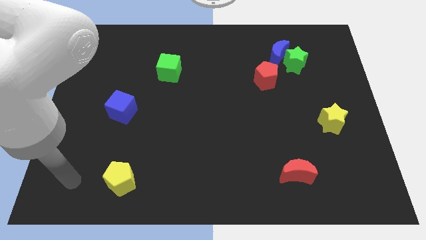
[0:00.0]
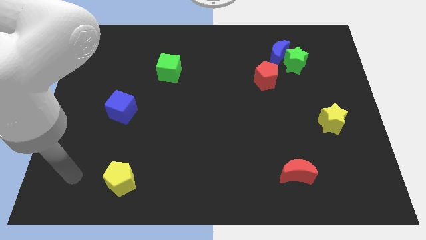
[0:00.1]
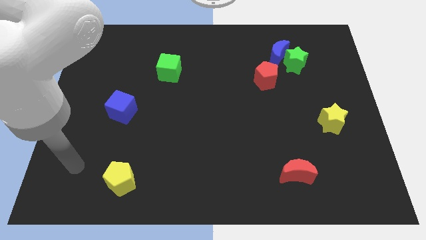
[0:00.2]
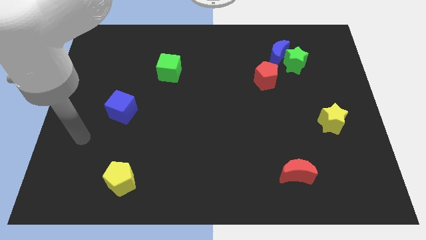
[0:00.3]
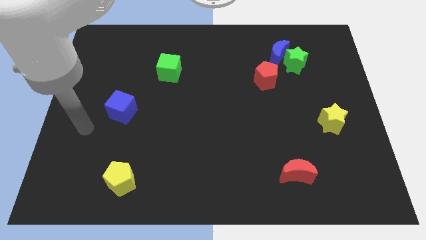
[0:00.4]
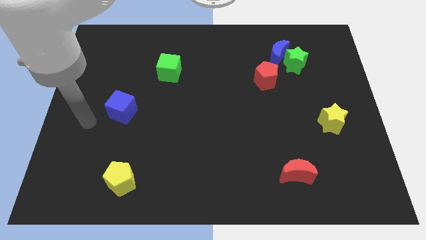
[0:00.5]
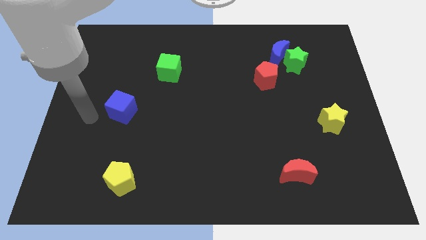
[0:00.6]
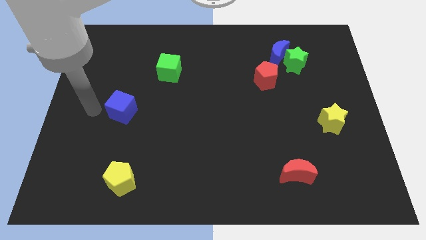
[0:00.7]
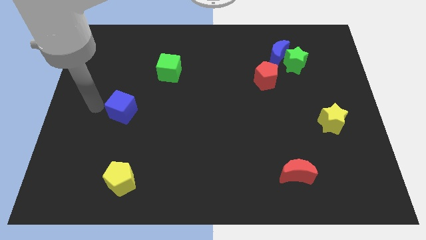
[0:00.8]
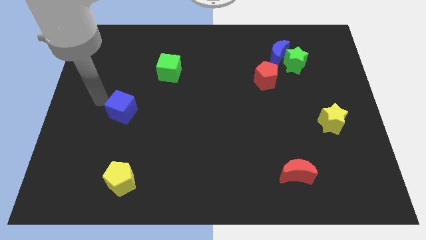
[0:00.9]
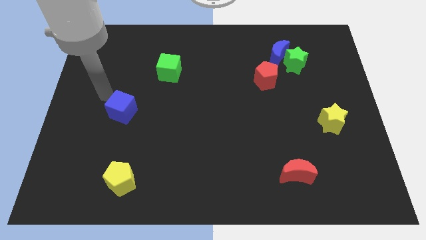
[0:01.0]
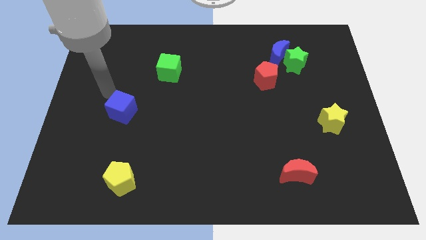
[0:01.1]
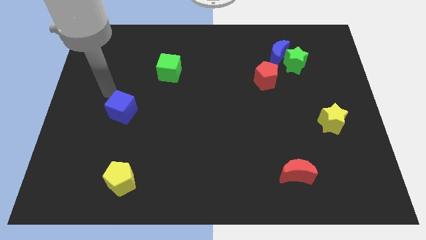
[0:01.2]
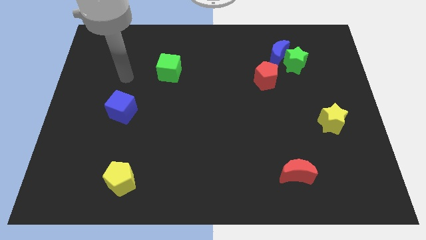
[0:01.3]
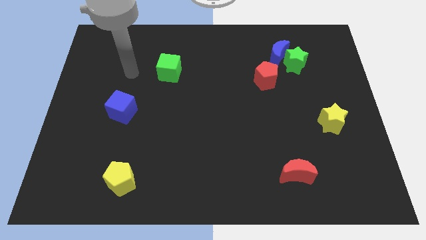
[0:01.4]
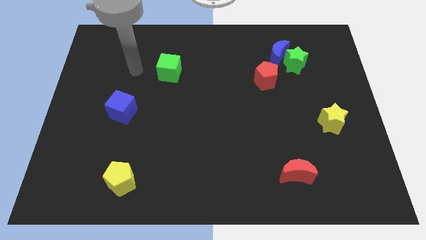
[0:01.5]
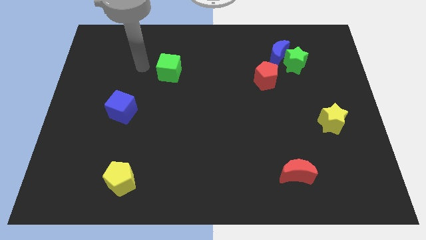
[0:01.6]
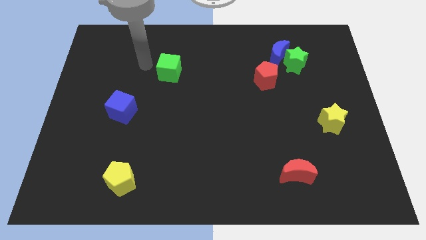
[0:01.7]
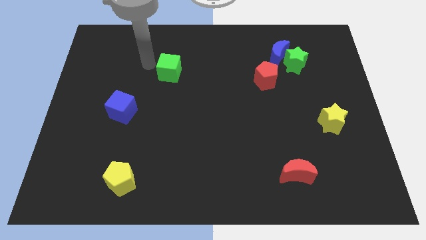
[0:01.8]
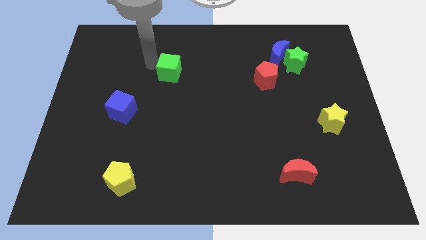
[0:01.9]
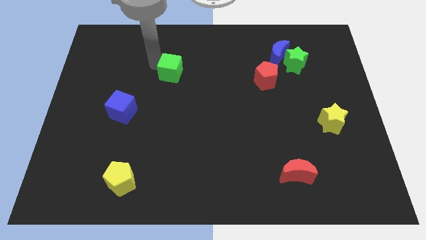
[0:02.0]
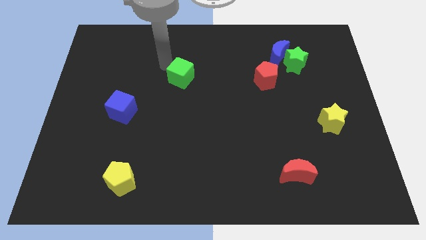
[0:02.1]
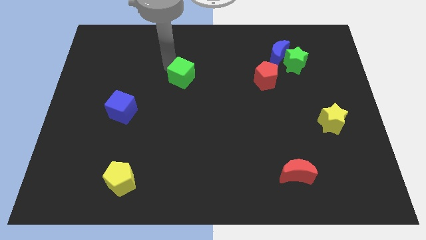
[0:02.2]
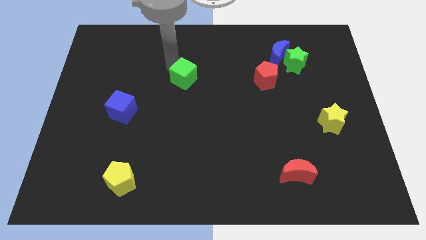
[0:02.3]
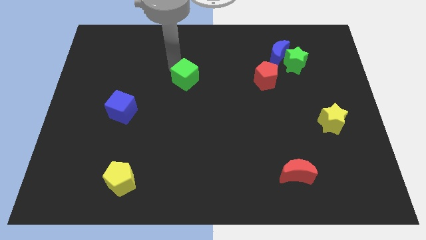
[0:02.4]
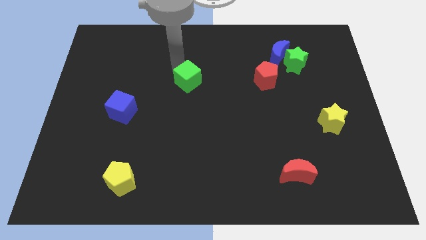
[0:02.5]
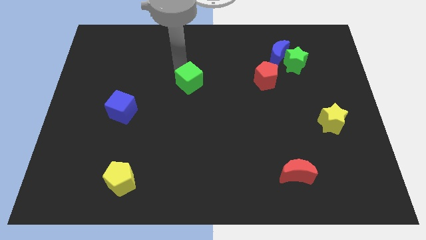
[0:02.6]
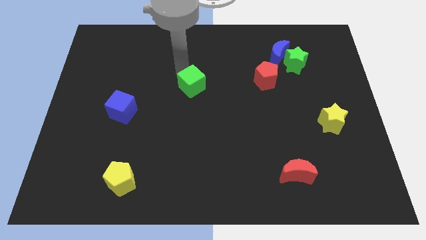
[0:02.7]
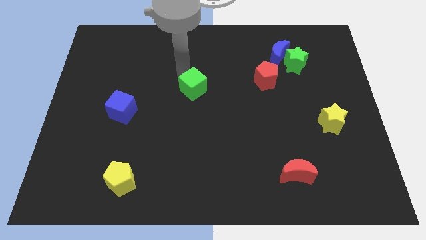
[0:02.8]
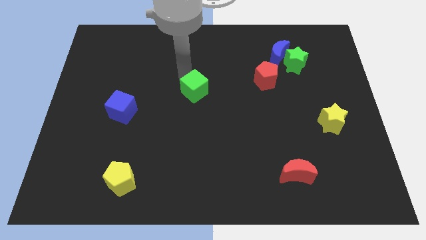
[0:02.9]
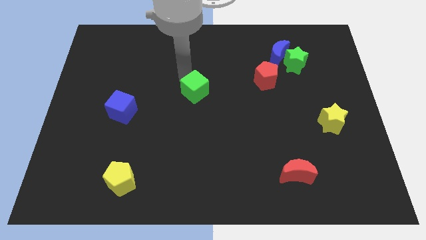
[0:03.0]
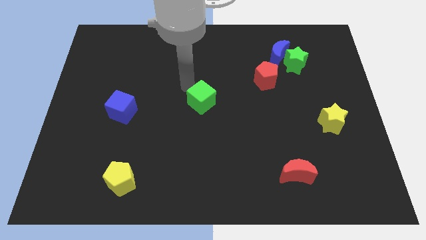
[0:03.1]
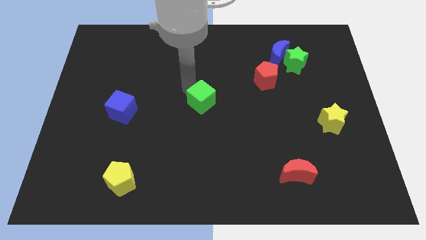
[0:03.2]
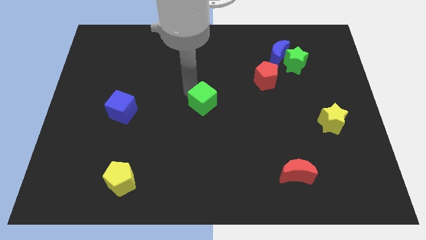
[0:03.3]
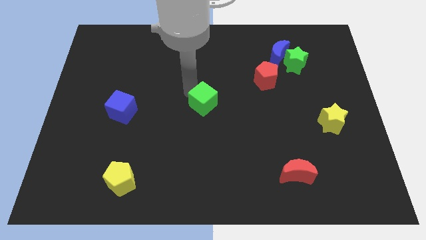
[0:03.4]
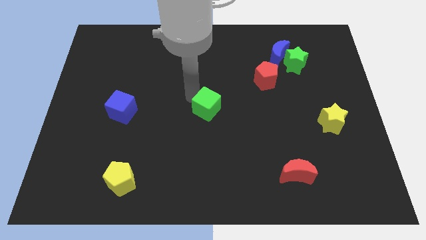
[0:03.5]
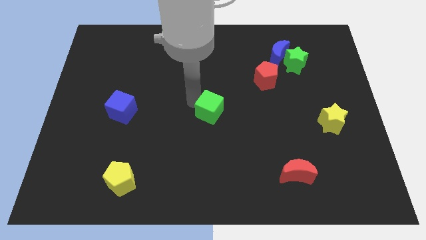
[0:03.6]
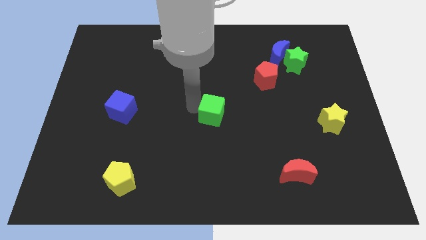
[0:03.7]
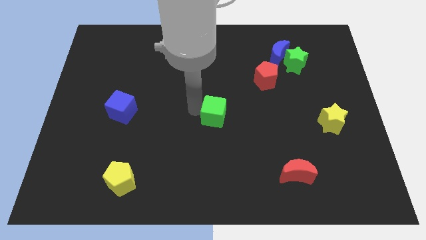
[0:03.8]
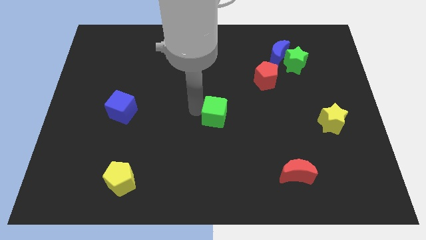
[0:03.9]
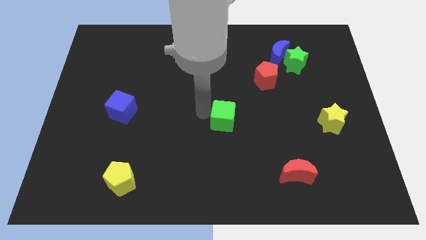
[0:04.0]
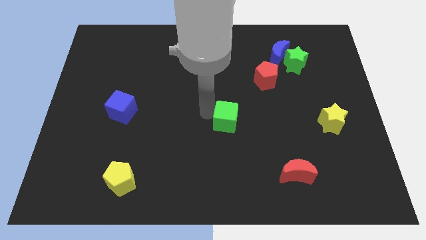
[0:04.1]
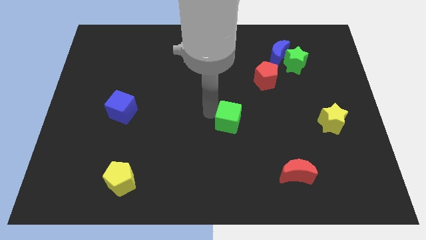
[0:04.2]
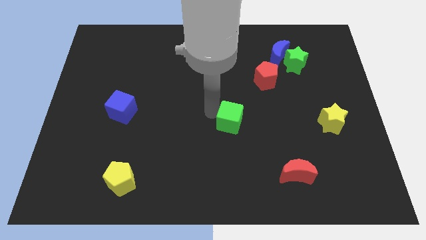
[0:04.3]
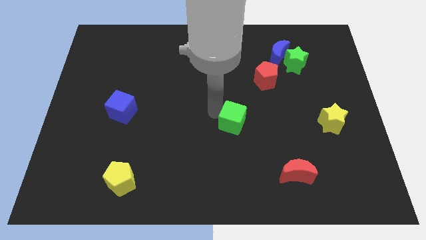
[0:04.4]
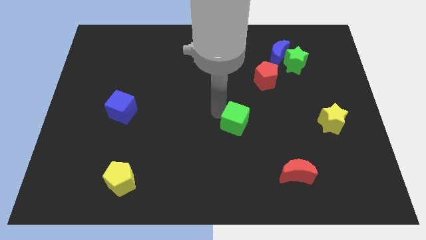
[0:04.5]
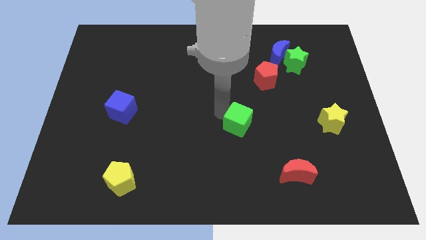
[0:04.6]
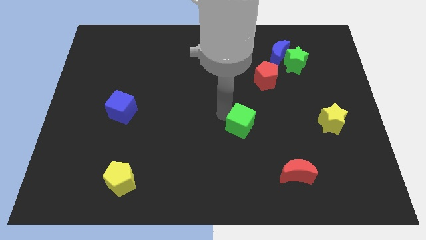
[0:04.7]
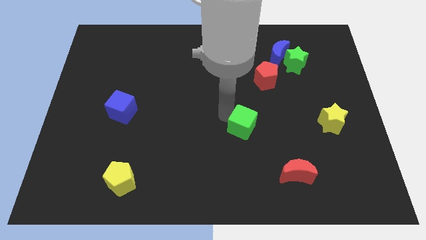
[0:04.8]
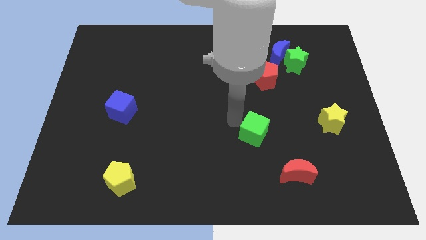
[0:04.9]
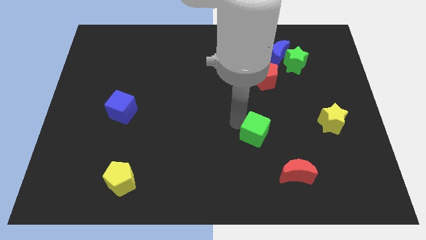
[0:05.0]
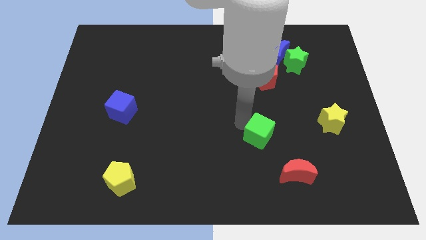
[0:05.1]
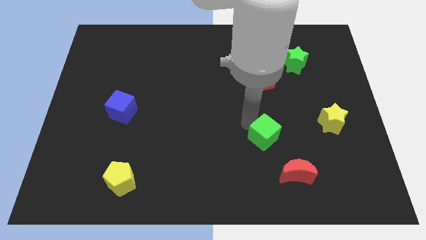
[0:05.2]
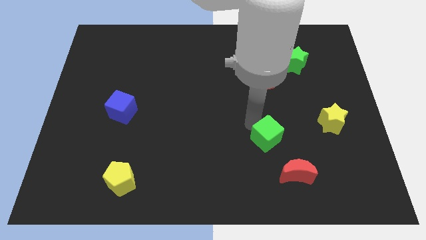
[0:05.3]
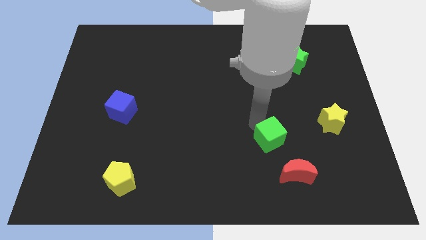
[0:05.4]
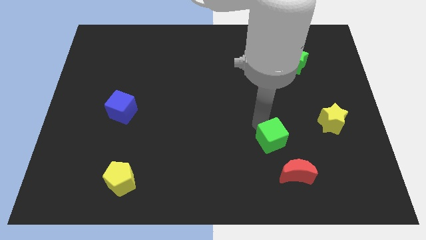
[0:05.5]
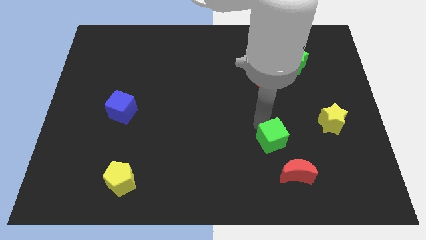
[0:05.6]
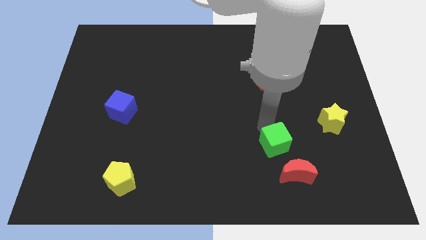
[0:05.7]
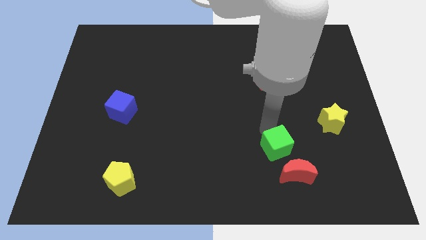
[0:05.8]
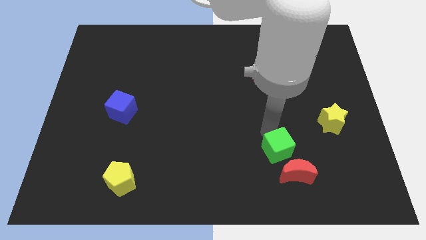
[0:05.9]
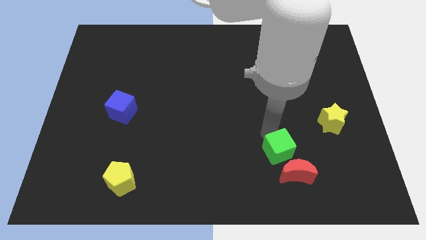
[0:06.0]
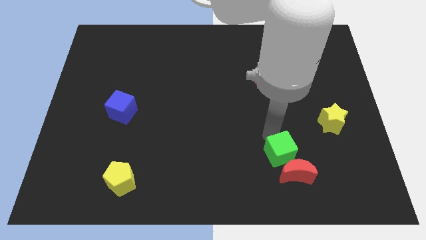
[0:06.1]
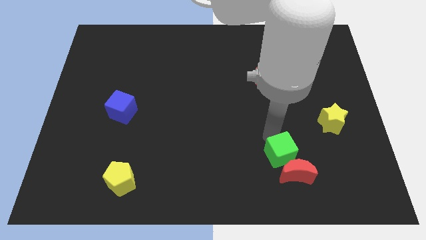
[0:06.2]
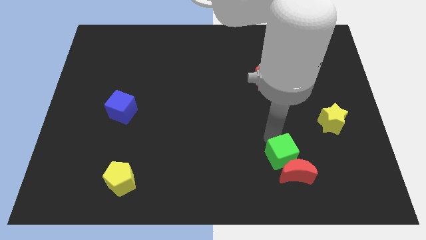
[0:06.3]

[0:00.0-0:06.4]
move the green cube to the red moon

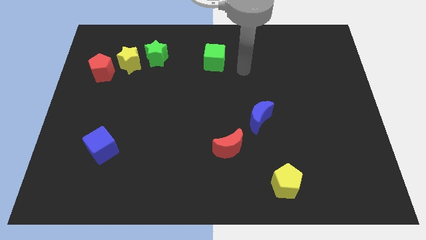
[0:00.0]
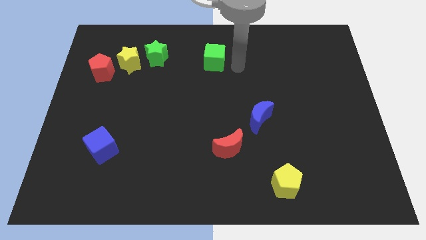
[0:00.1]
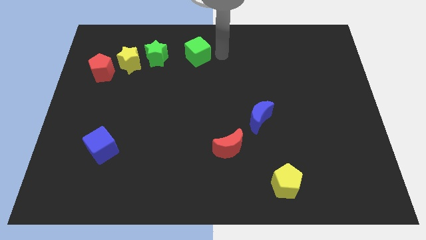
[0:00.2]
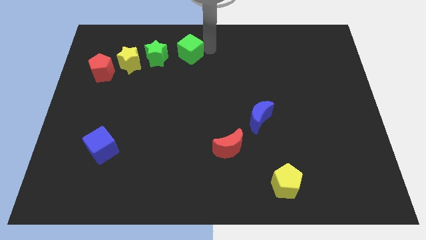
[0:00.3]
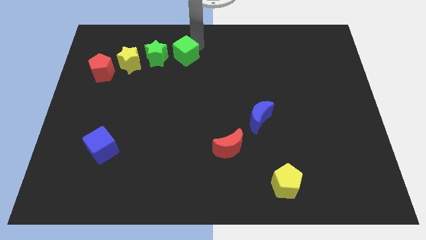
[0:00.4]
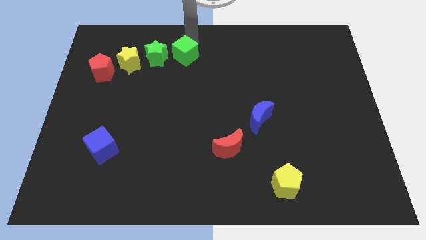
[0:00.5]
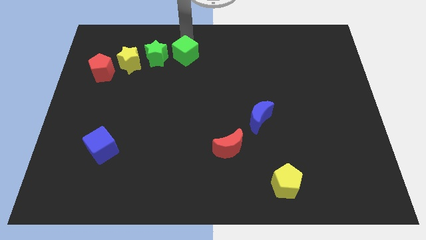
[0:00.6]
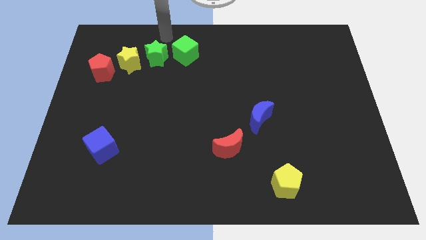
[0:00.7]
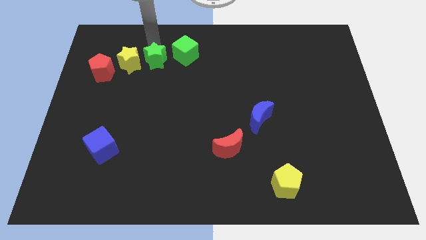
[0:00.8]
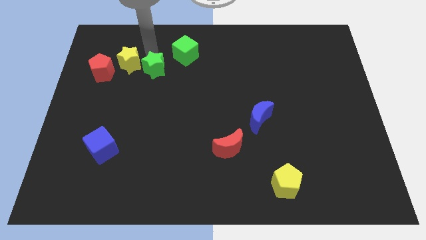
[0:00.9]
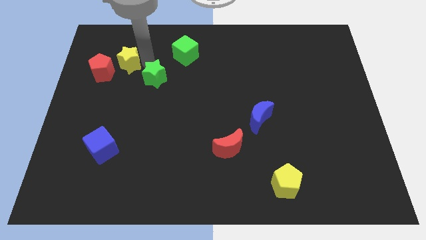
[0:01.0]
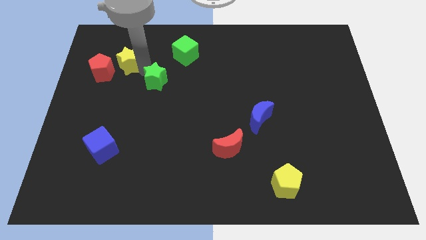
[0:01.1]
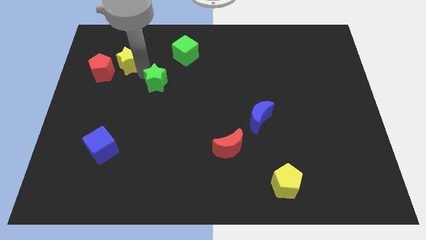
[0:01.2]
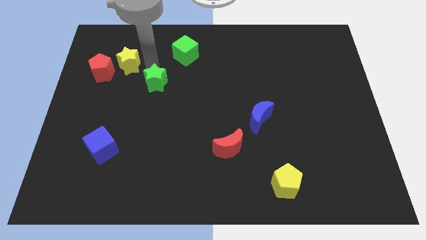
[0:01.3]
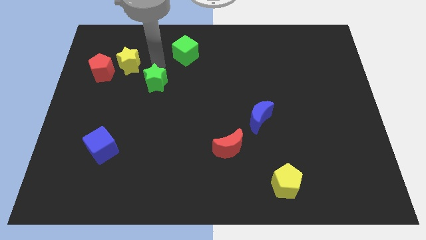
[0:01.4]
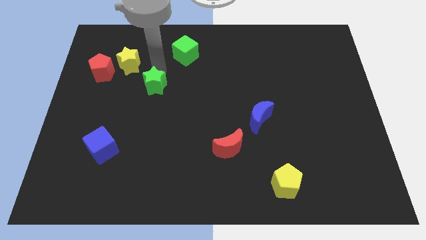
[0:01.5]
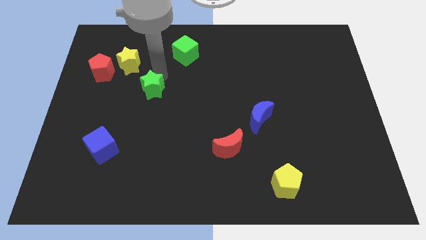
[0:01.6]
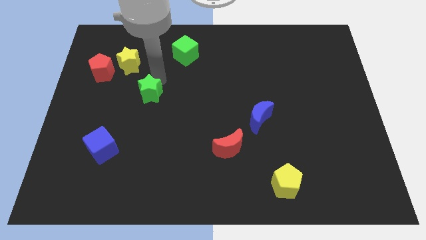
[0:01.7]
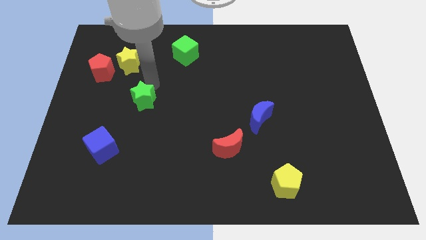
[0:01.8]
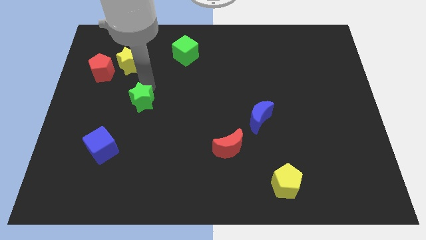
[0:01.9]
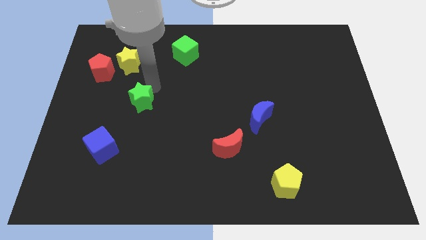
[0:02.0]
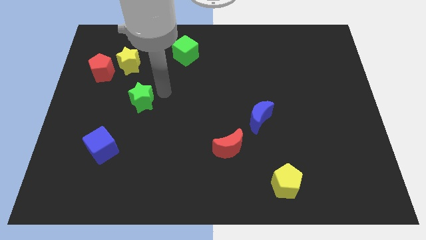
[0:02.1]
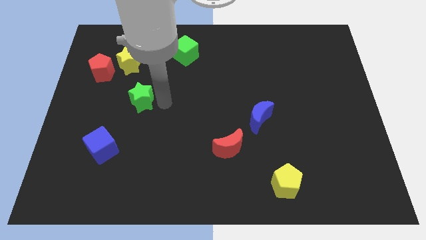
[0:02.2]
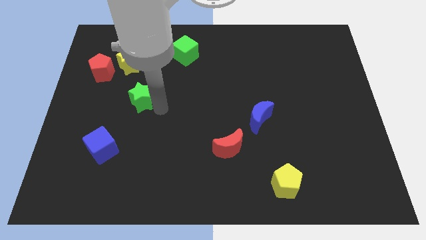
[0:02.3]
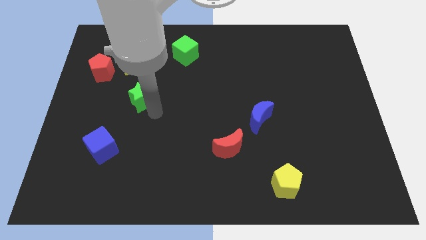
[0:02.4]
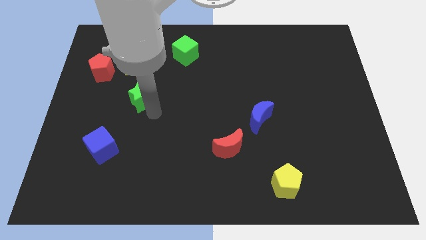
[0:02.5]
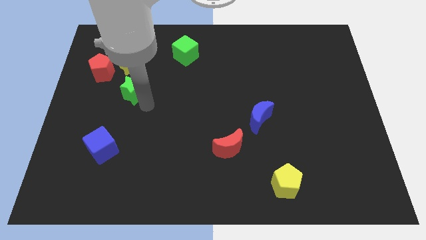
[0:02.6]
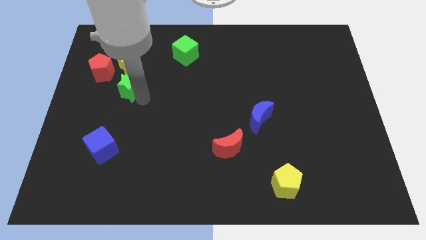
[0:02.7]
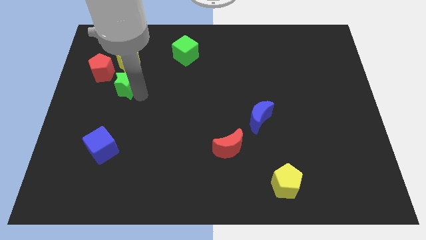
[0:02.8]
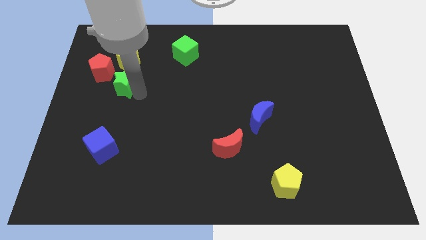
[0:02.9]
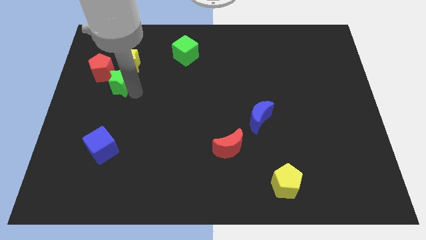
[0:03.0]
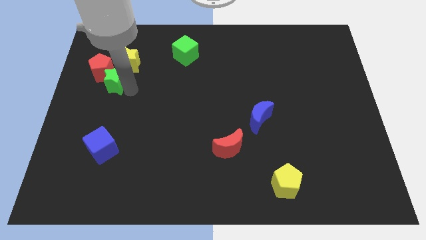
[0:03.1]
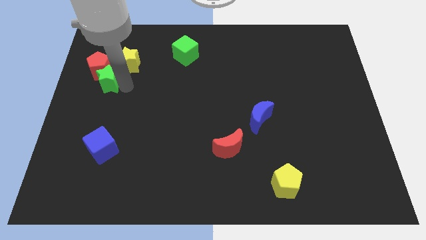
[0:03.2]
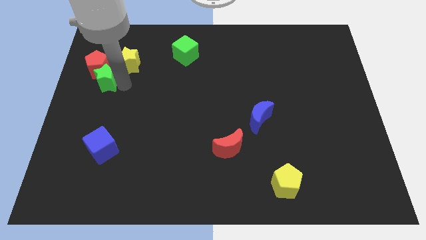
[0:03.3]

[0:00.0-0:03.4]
put the green star close to the red pentagon
